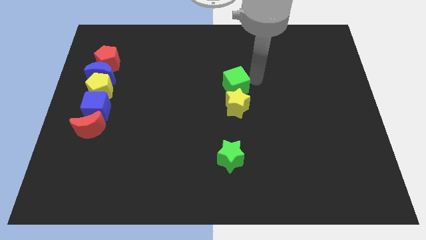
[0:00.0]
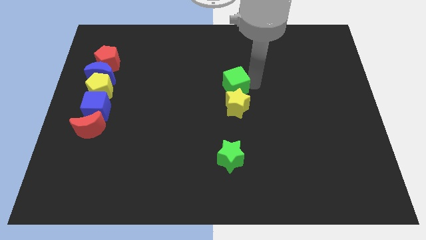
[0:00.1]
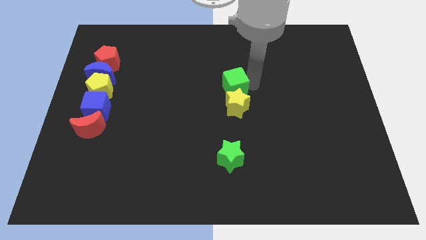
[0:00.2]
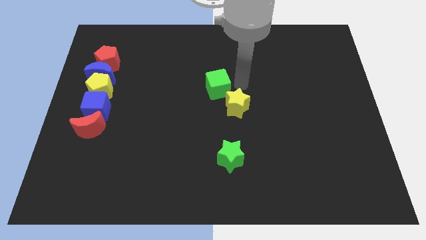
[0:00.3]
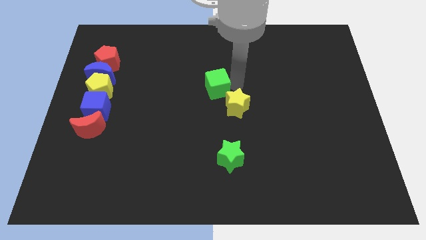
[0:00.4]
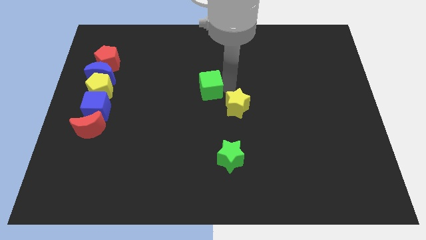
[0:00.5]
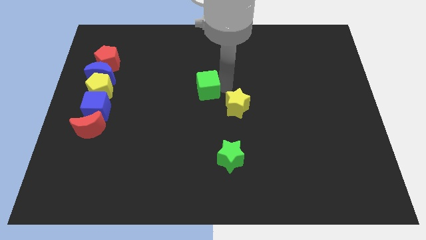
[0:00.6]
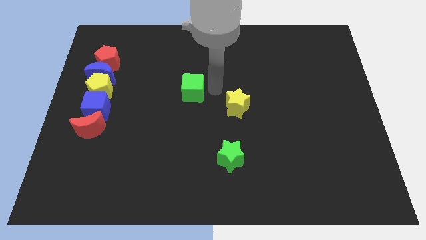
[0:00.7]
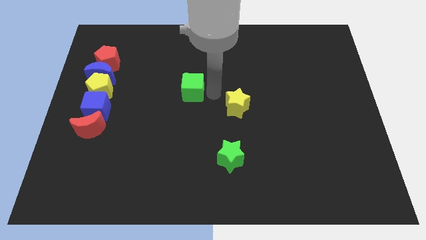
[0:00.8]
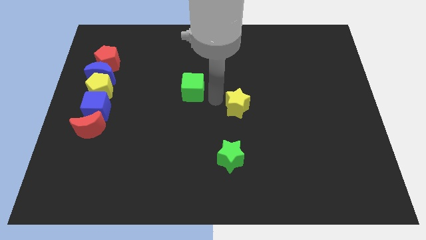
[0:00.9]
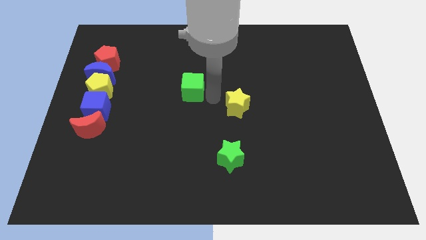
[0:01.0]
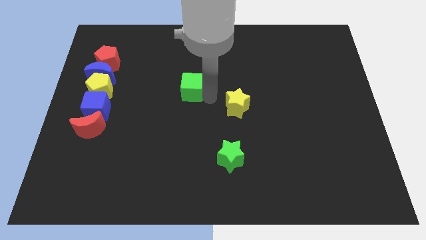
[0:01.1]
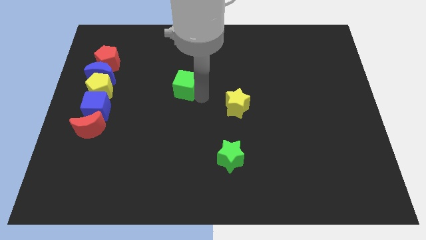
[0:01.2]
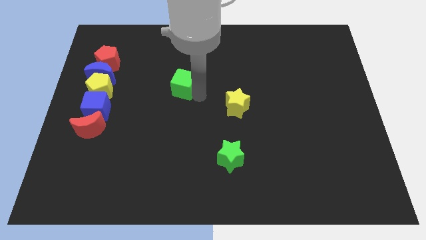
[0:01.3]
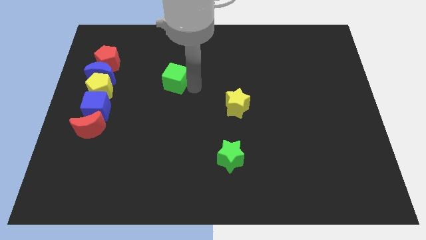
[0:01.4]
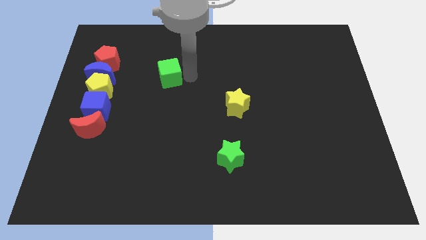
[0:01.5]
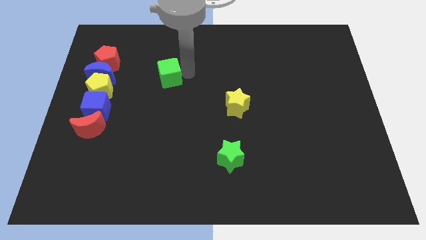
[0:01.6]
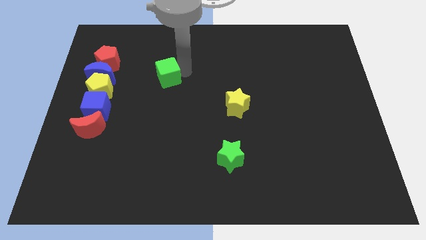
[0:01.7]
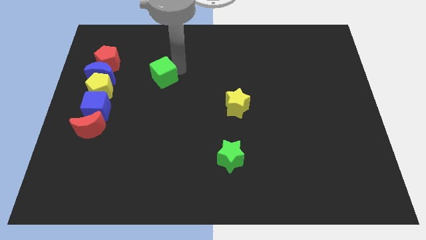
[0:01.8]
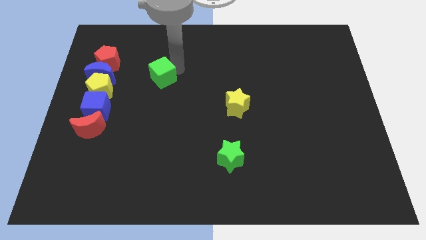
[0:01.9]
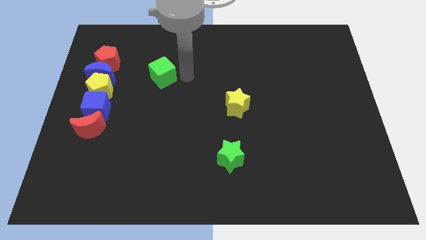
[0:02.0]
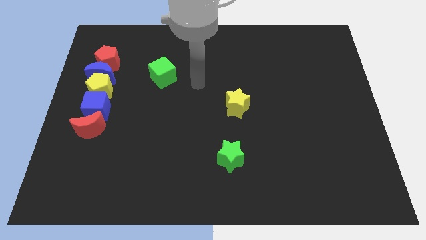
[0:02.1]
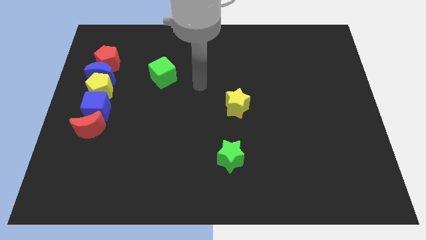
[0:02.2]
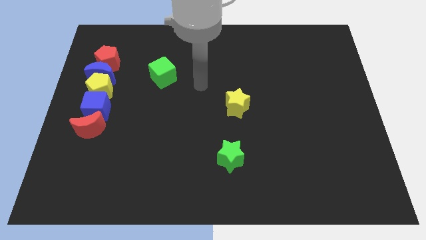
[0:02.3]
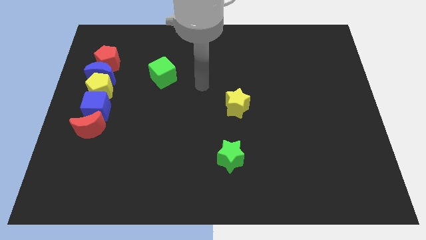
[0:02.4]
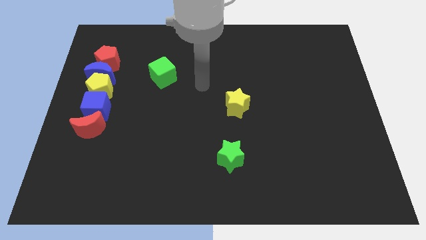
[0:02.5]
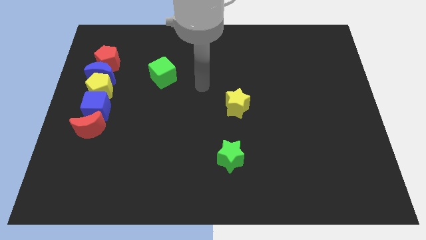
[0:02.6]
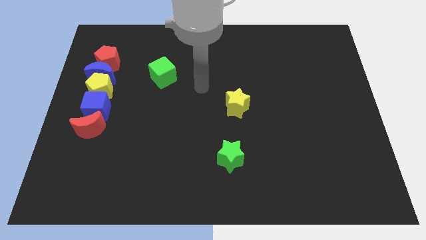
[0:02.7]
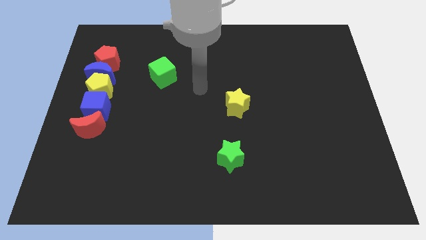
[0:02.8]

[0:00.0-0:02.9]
push the green cube towards the red pentagon

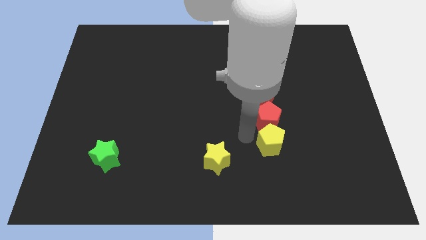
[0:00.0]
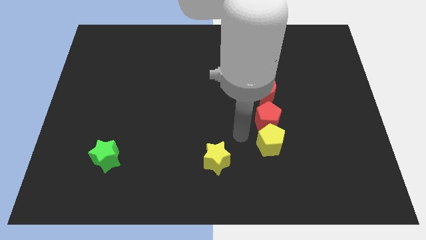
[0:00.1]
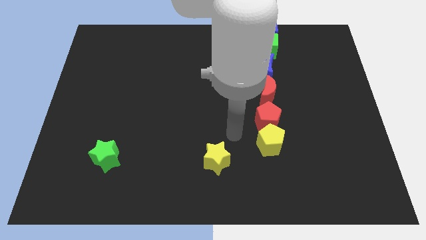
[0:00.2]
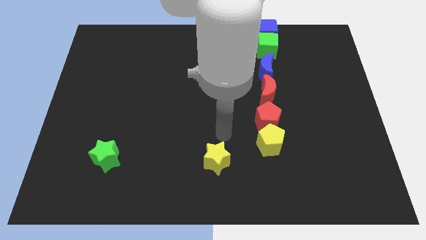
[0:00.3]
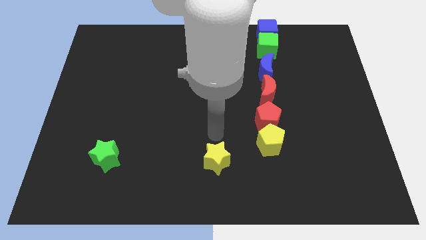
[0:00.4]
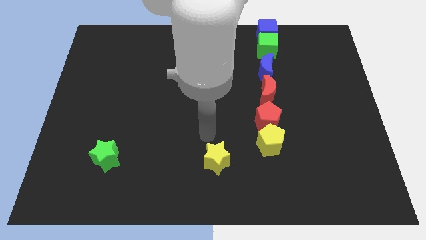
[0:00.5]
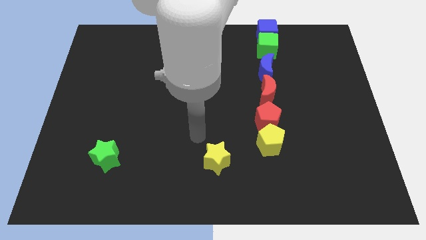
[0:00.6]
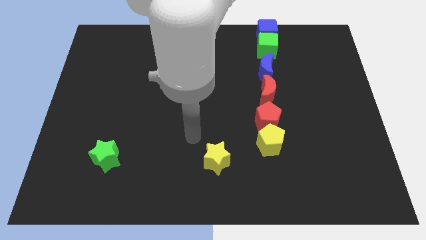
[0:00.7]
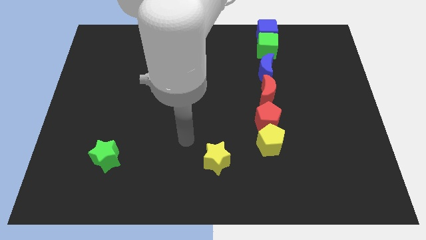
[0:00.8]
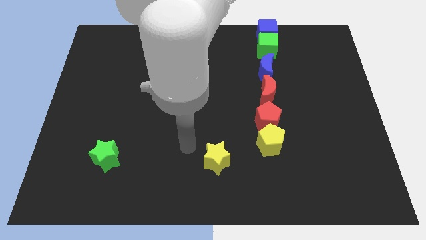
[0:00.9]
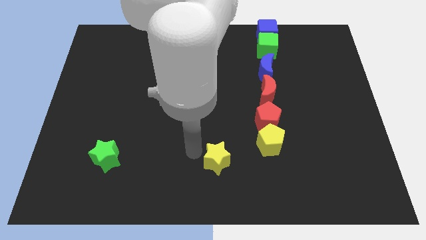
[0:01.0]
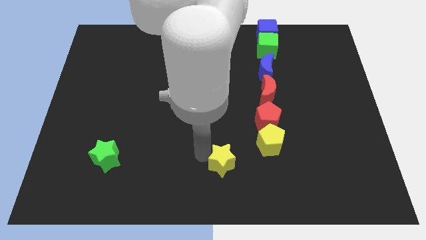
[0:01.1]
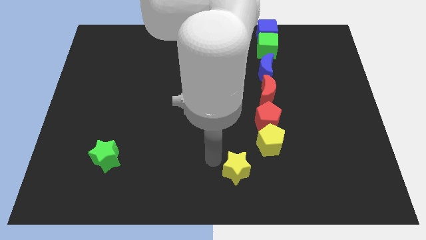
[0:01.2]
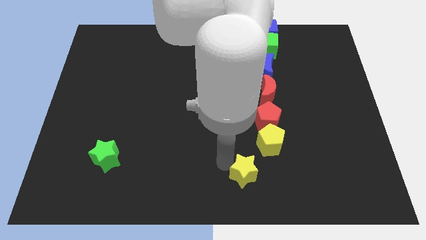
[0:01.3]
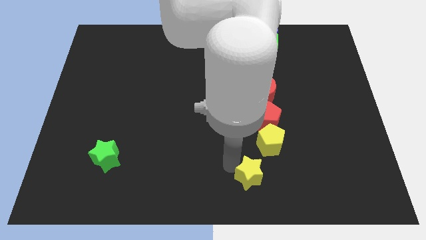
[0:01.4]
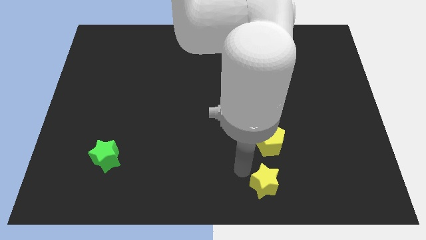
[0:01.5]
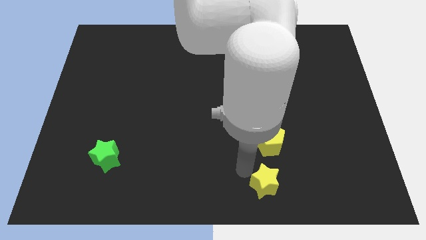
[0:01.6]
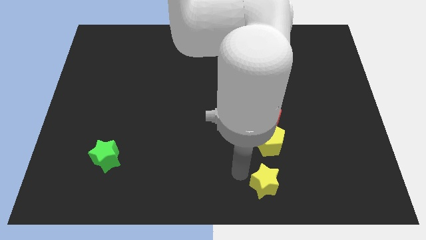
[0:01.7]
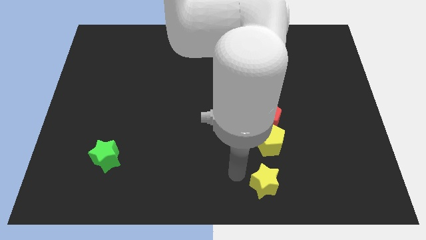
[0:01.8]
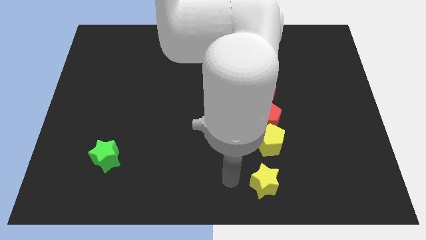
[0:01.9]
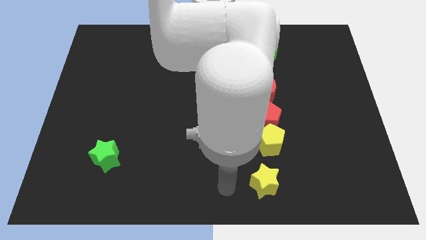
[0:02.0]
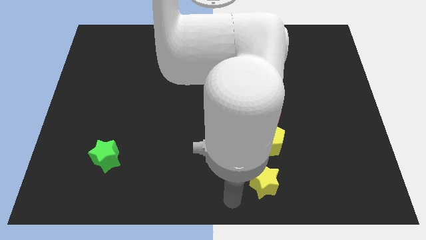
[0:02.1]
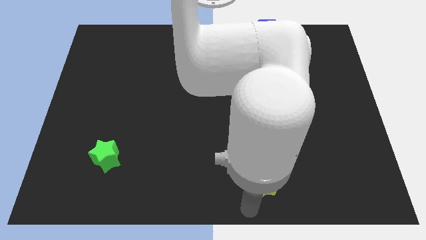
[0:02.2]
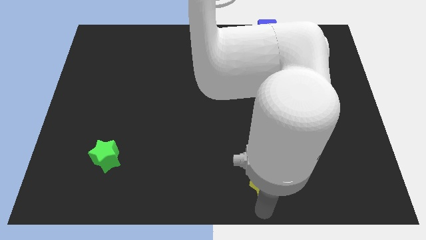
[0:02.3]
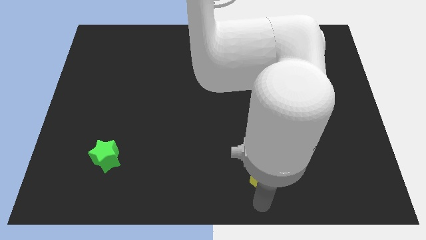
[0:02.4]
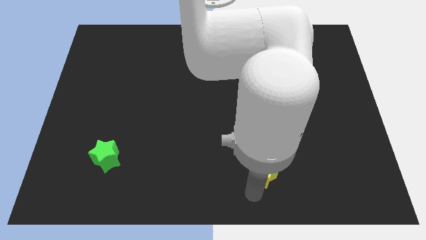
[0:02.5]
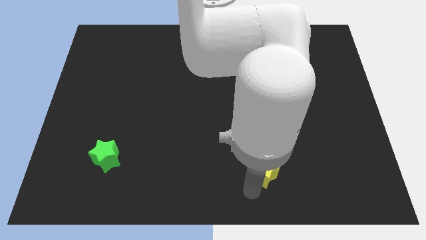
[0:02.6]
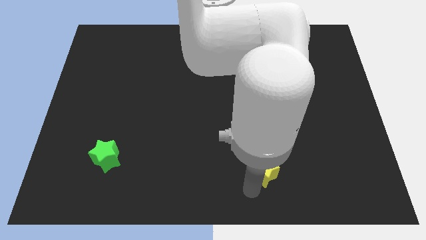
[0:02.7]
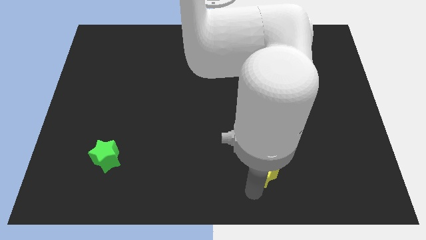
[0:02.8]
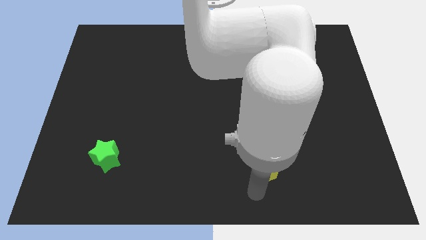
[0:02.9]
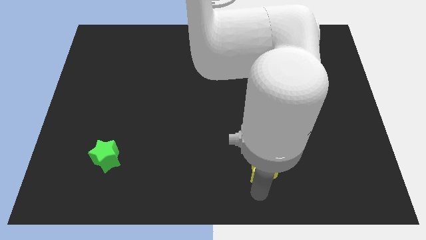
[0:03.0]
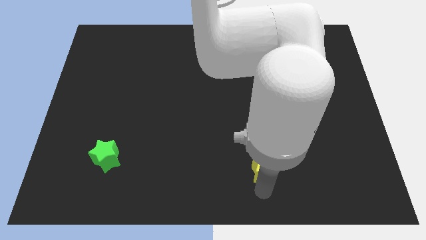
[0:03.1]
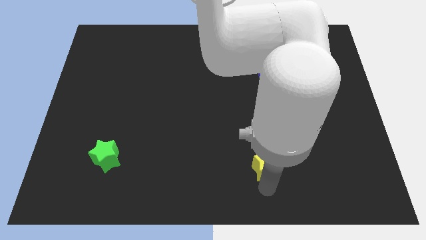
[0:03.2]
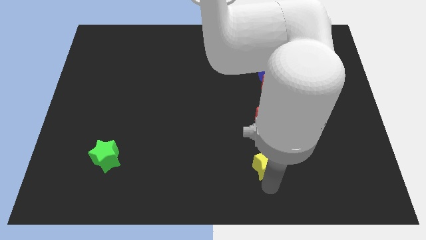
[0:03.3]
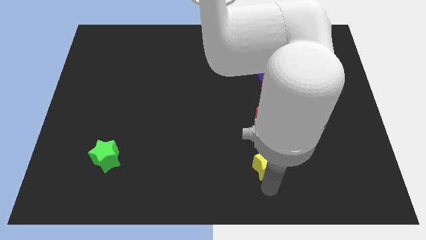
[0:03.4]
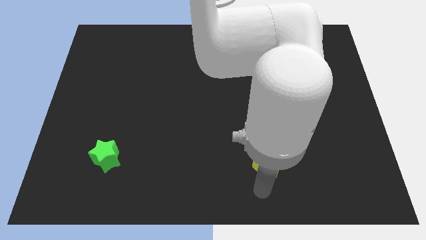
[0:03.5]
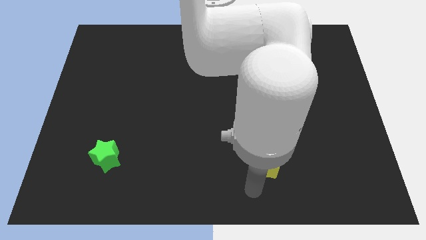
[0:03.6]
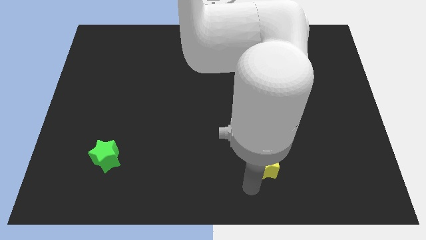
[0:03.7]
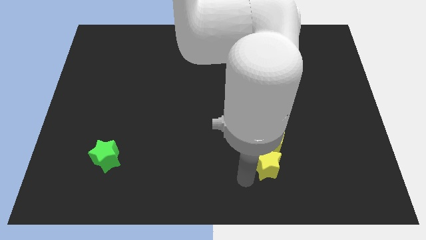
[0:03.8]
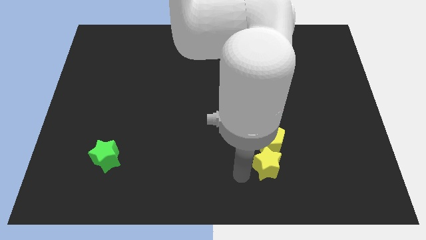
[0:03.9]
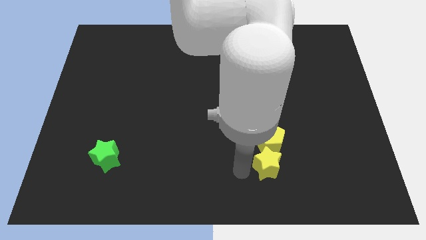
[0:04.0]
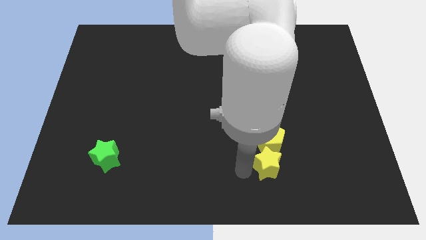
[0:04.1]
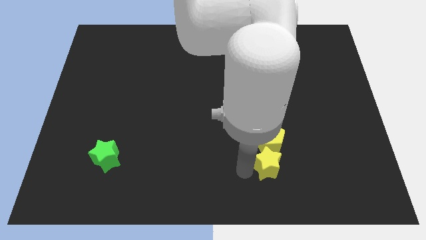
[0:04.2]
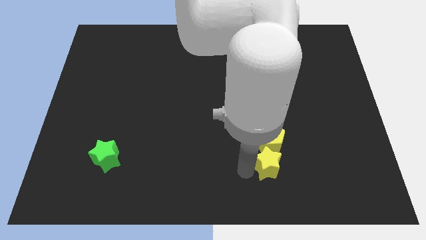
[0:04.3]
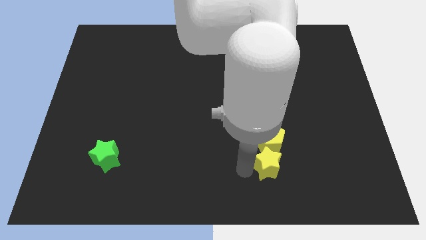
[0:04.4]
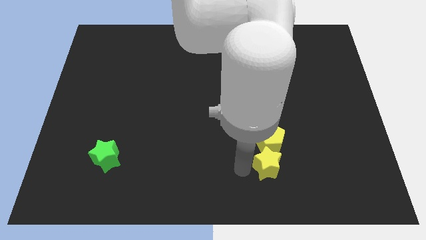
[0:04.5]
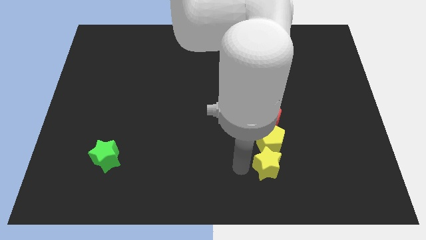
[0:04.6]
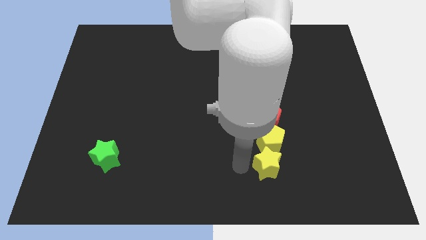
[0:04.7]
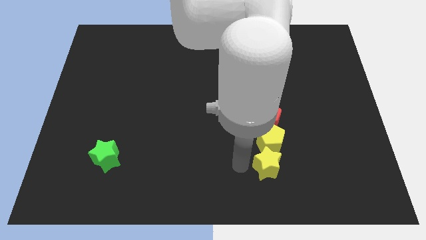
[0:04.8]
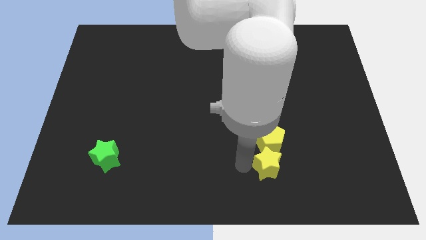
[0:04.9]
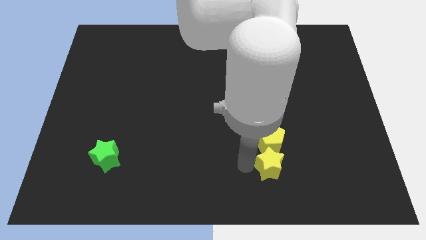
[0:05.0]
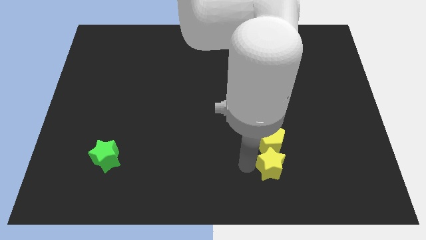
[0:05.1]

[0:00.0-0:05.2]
push the yellow star to the bottom of the yellow pentagon

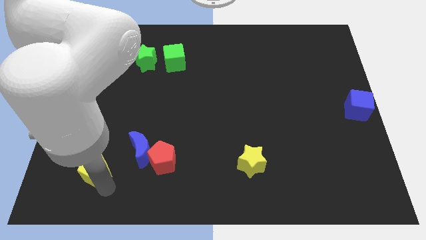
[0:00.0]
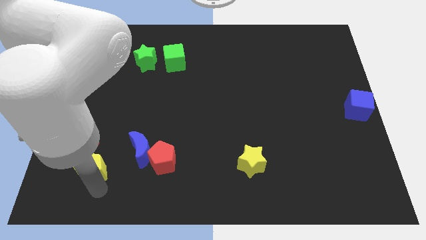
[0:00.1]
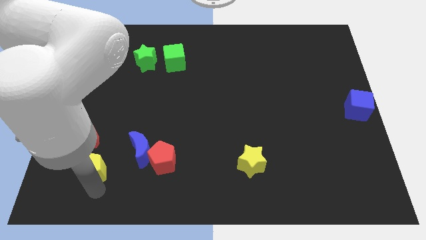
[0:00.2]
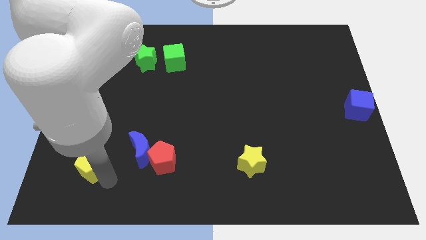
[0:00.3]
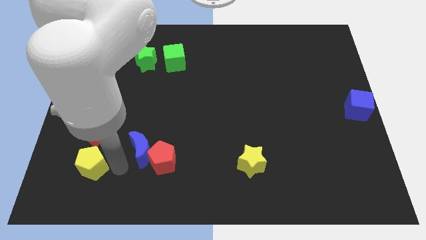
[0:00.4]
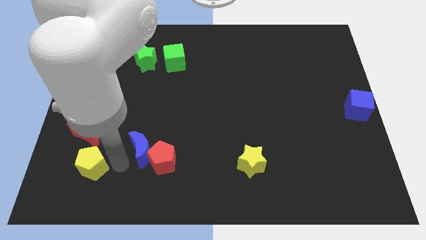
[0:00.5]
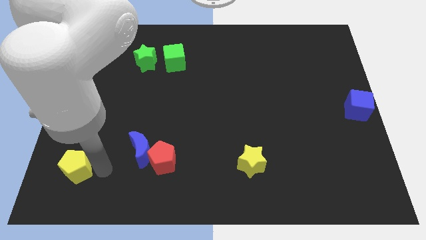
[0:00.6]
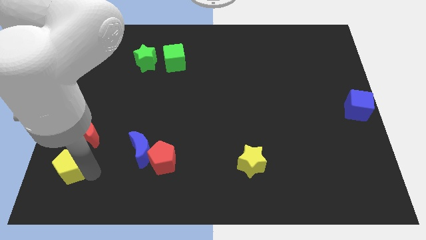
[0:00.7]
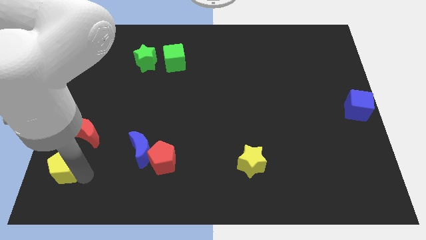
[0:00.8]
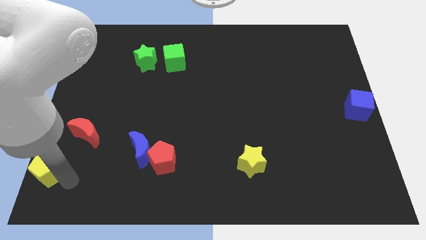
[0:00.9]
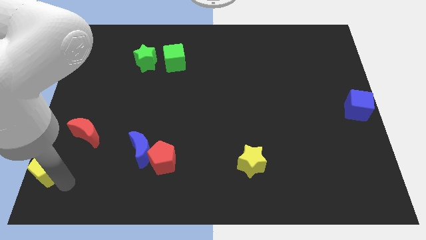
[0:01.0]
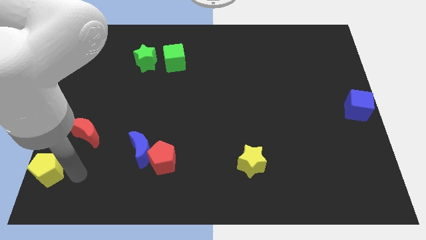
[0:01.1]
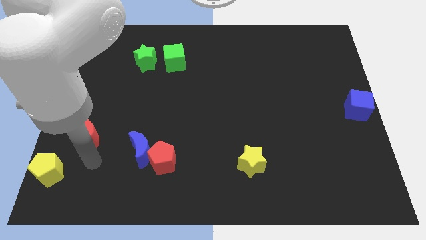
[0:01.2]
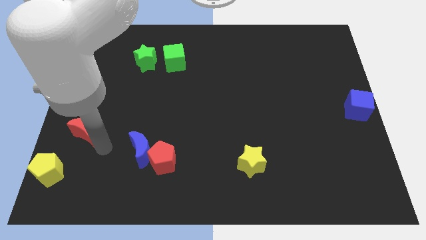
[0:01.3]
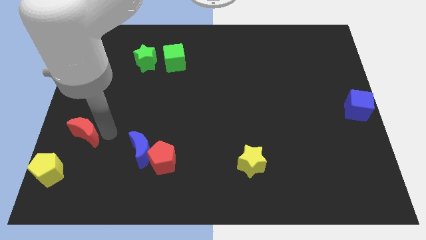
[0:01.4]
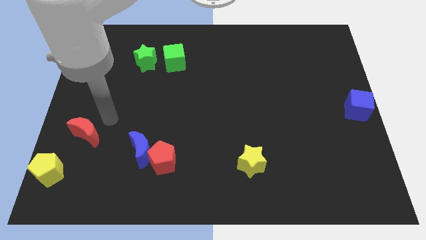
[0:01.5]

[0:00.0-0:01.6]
slide the yellow pentagon slightly to the left
